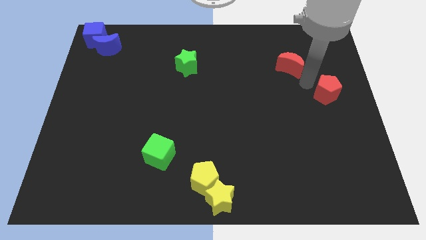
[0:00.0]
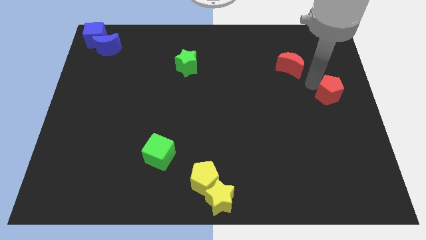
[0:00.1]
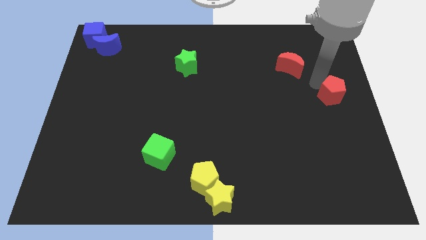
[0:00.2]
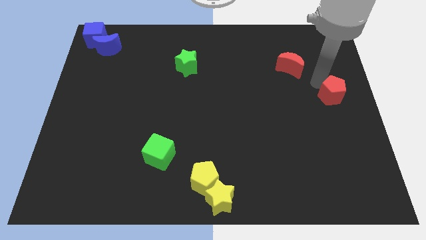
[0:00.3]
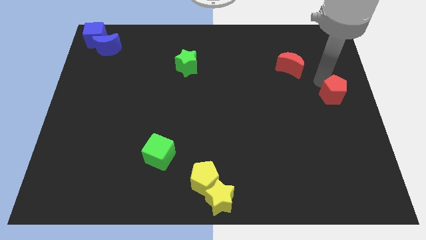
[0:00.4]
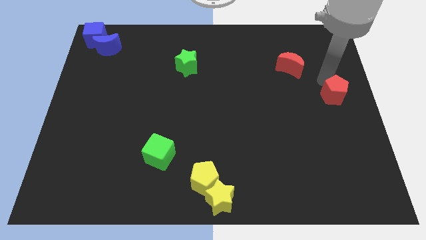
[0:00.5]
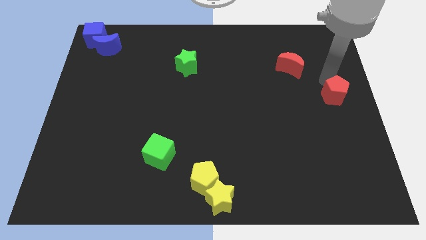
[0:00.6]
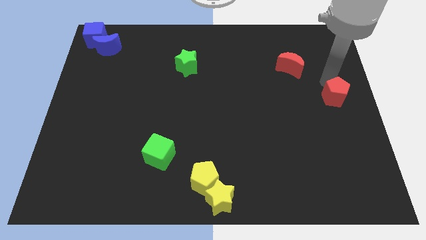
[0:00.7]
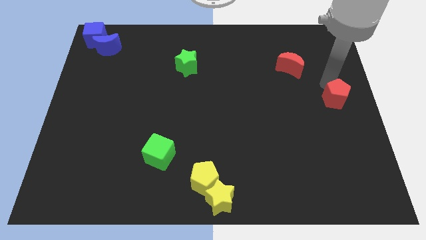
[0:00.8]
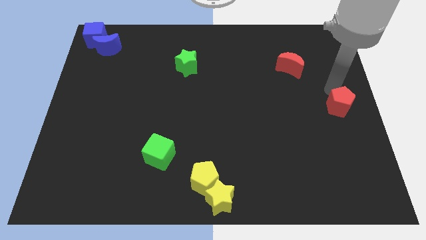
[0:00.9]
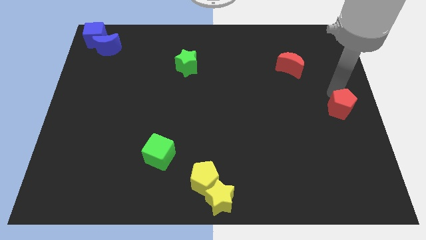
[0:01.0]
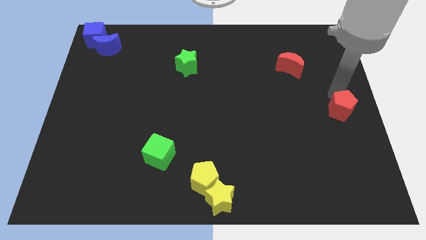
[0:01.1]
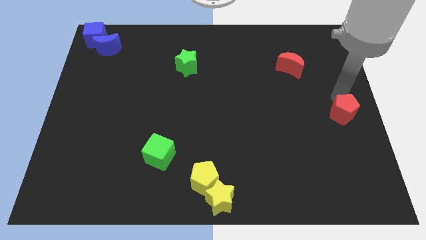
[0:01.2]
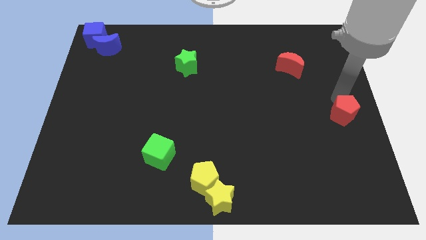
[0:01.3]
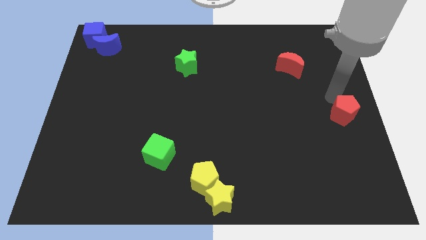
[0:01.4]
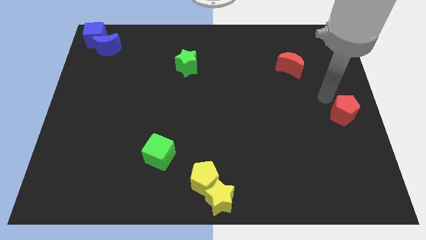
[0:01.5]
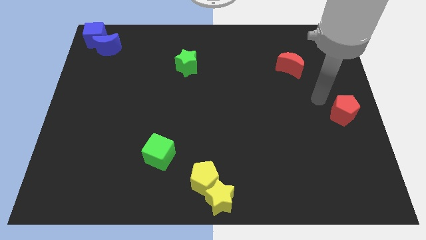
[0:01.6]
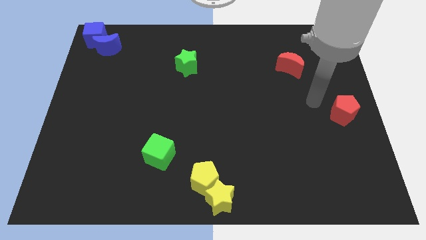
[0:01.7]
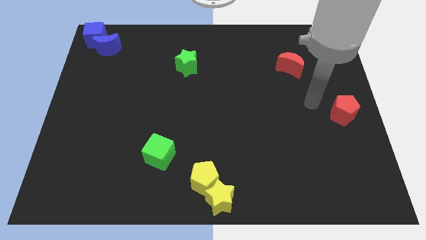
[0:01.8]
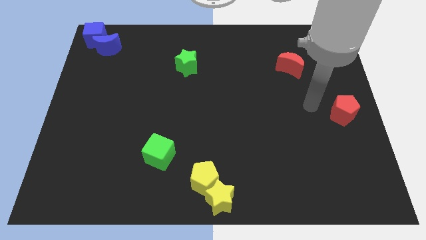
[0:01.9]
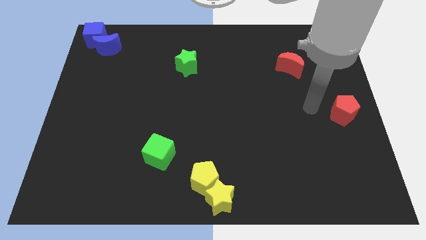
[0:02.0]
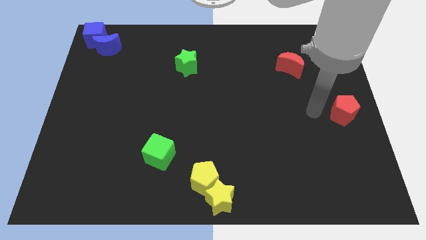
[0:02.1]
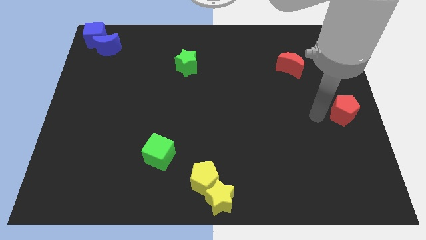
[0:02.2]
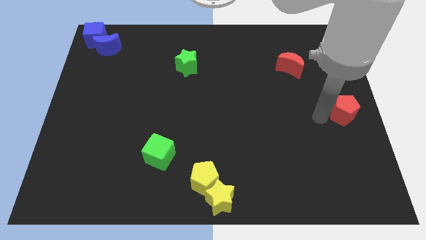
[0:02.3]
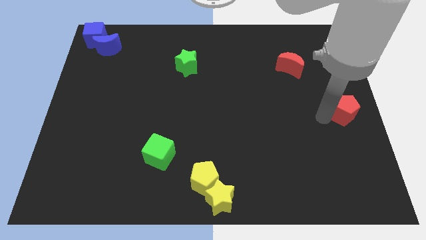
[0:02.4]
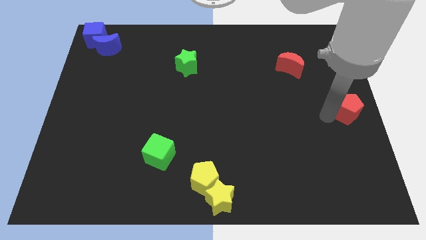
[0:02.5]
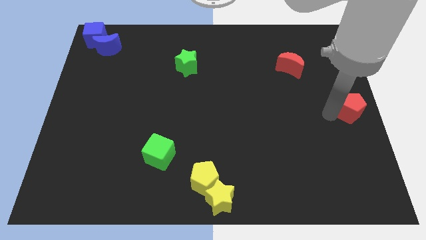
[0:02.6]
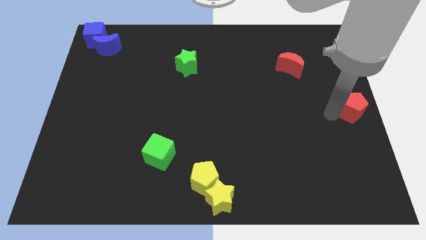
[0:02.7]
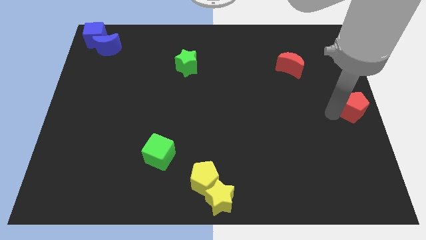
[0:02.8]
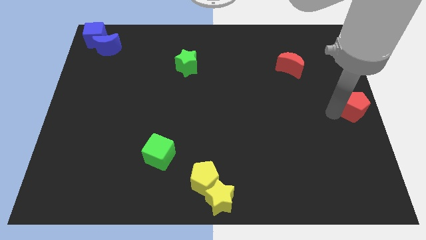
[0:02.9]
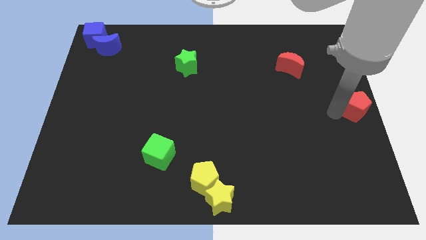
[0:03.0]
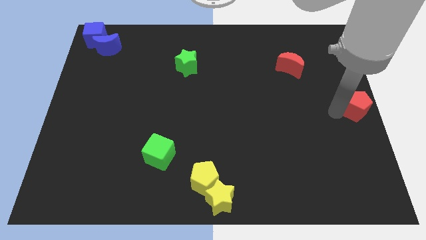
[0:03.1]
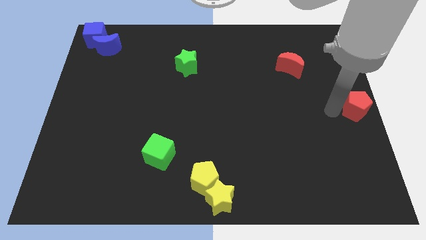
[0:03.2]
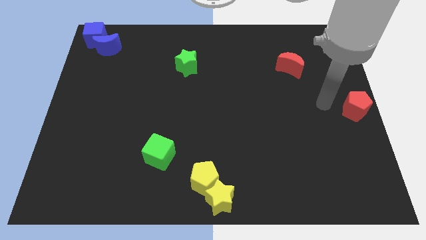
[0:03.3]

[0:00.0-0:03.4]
place the red pentagon at the right center of the board

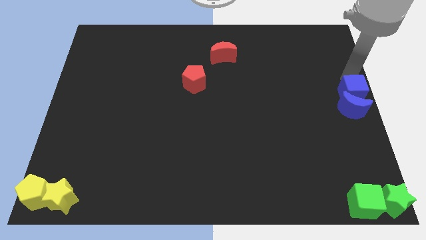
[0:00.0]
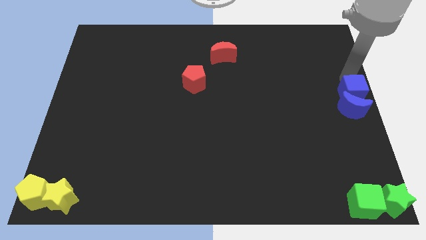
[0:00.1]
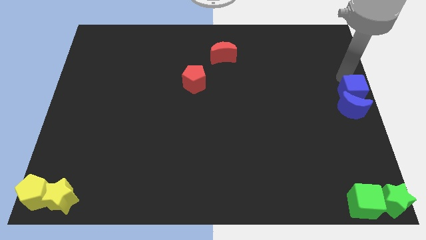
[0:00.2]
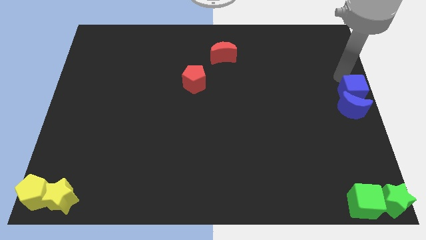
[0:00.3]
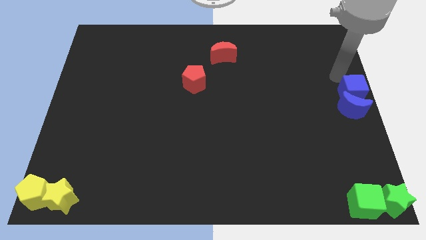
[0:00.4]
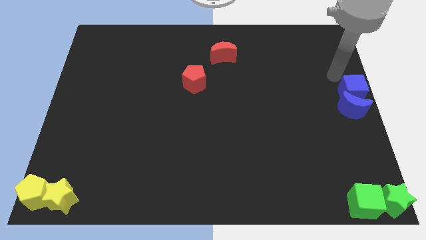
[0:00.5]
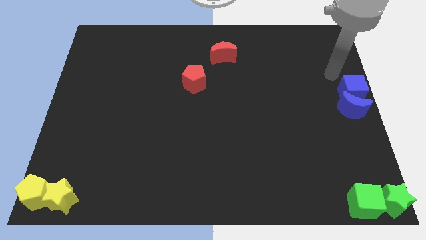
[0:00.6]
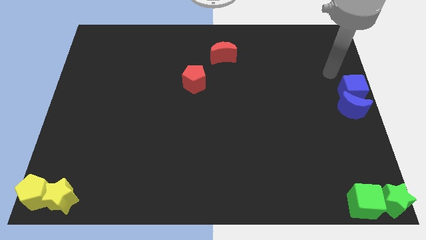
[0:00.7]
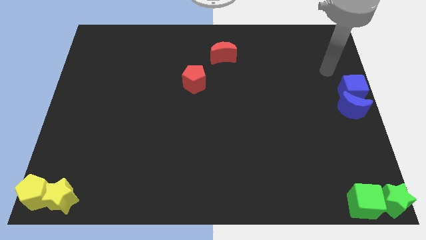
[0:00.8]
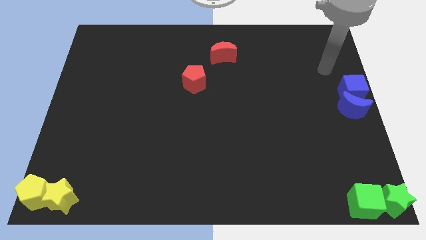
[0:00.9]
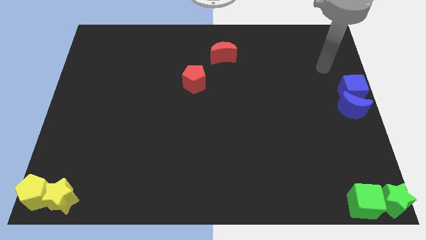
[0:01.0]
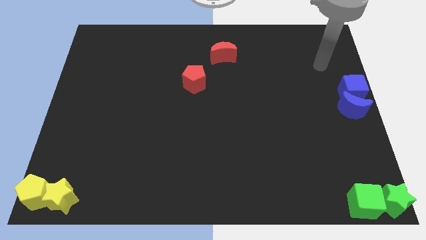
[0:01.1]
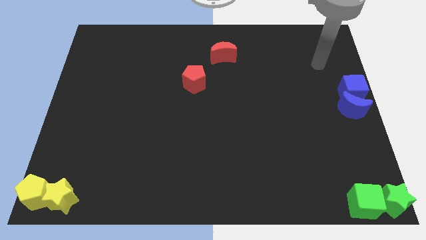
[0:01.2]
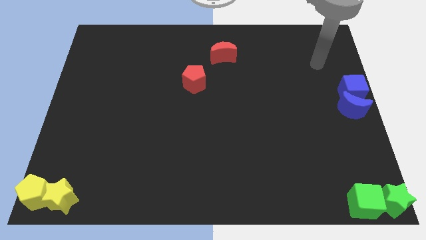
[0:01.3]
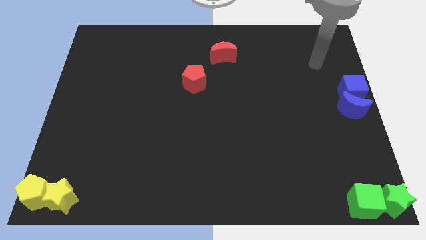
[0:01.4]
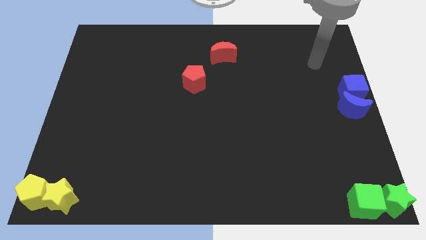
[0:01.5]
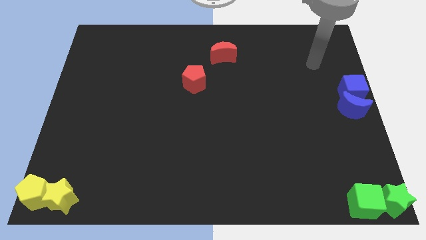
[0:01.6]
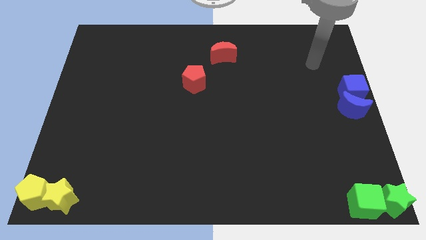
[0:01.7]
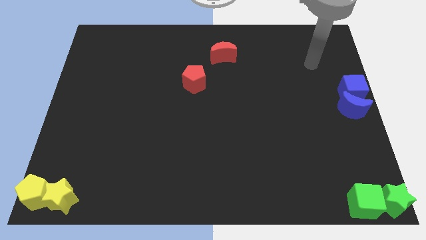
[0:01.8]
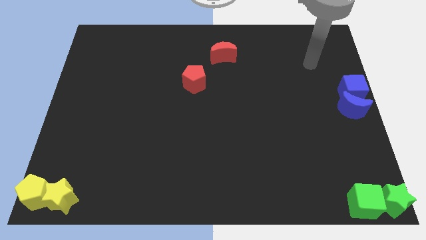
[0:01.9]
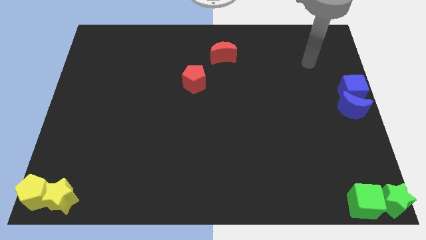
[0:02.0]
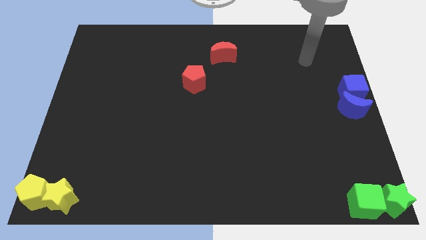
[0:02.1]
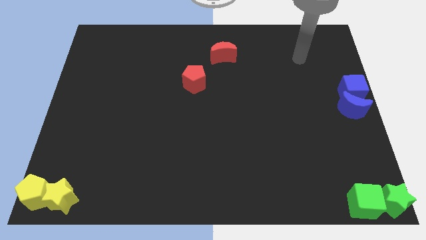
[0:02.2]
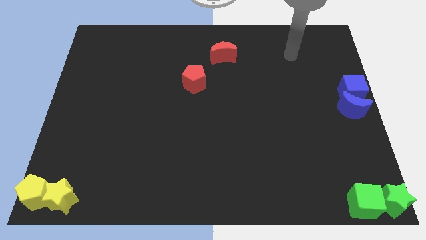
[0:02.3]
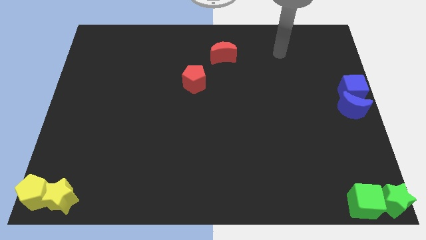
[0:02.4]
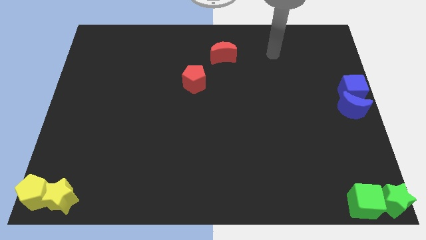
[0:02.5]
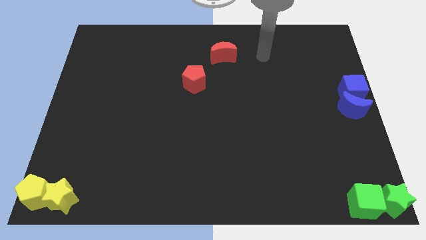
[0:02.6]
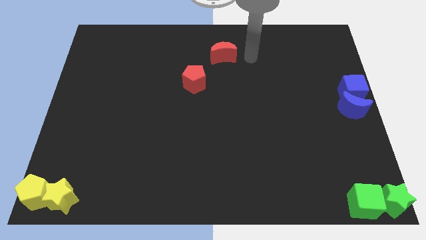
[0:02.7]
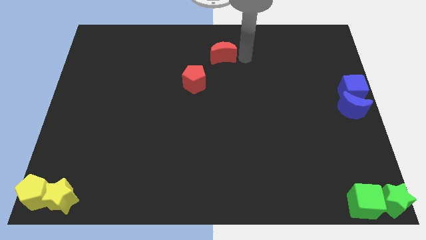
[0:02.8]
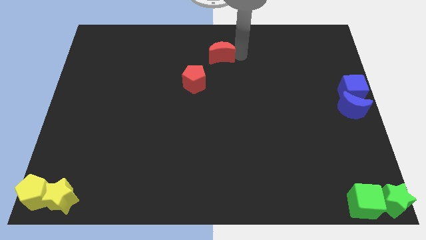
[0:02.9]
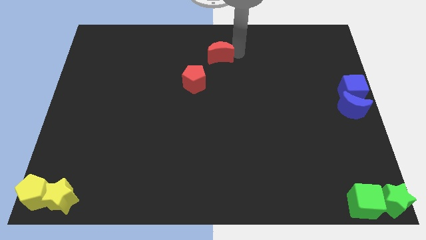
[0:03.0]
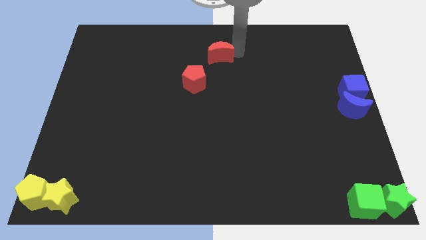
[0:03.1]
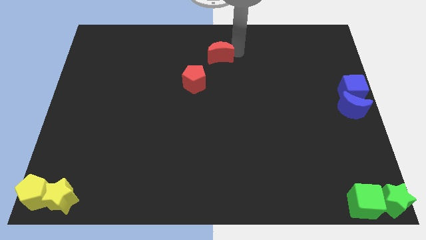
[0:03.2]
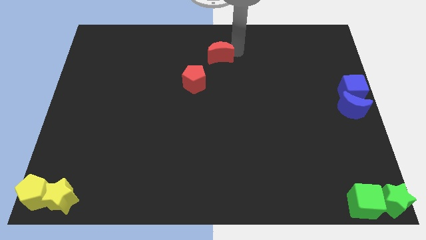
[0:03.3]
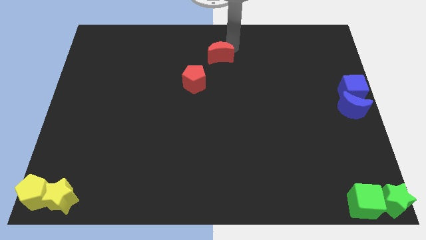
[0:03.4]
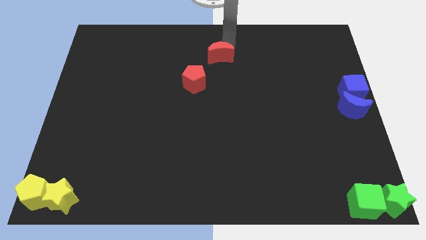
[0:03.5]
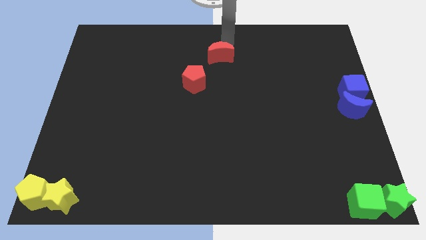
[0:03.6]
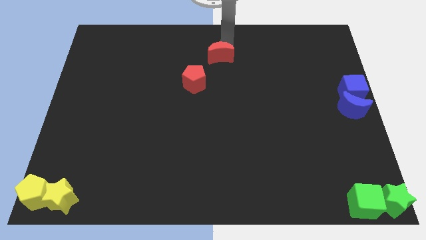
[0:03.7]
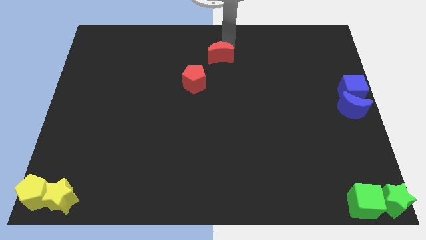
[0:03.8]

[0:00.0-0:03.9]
move the arm to the top right of the red crescent

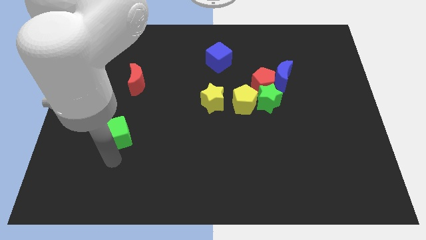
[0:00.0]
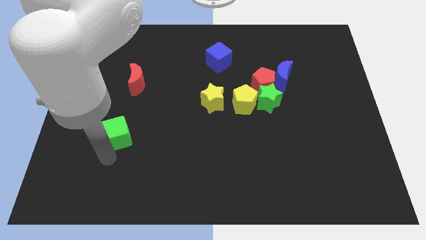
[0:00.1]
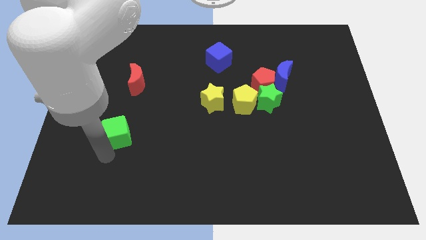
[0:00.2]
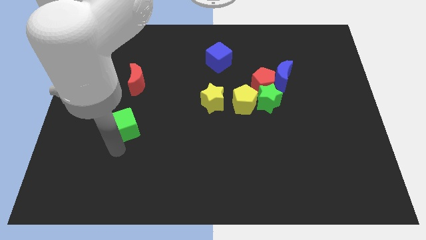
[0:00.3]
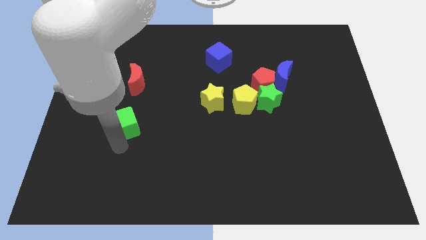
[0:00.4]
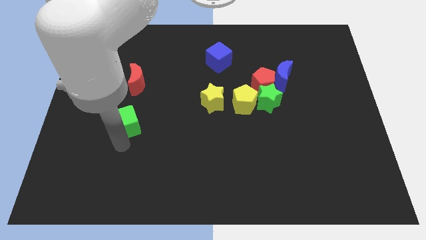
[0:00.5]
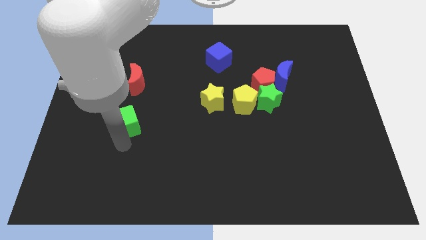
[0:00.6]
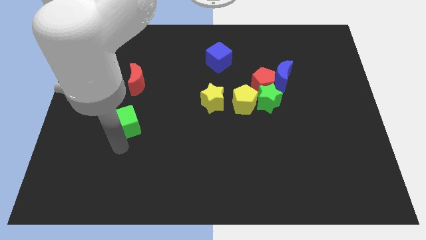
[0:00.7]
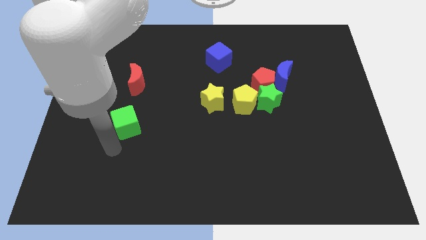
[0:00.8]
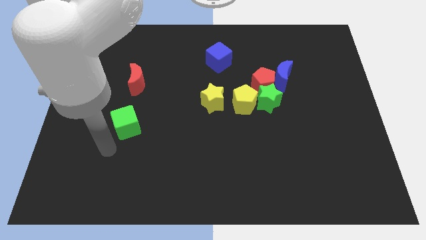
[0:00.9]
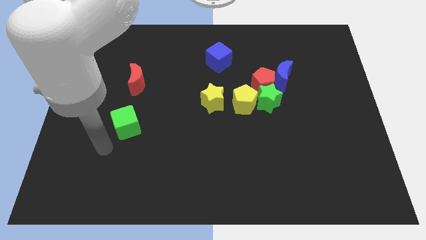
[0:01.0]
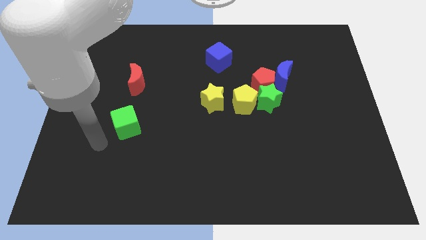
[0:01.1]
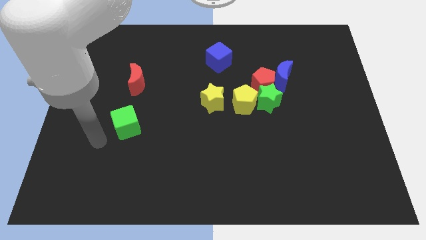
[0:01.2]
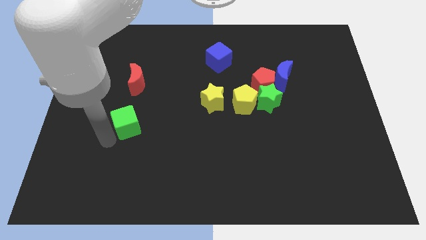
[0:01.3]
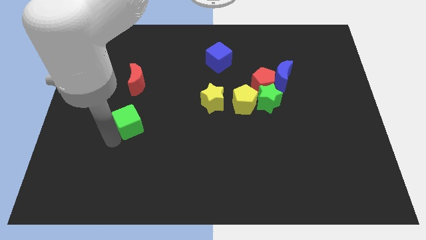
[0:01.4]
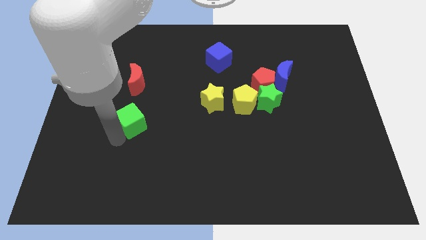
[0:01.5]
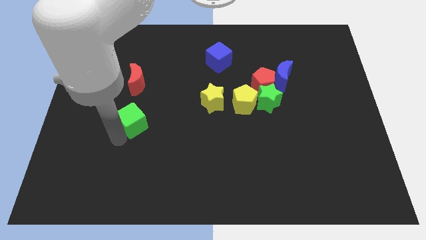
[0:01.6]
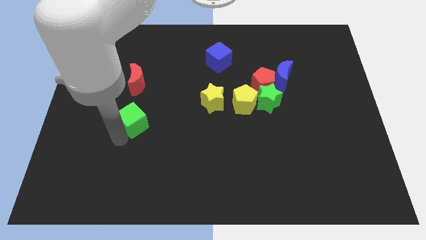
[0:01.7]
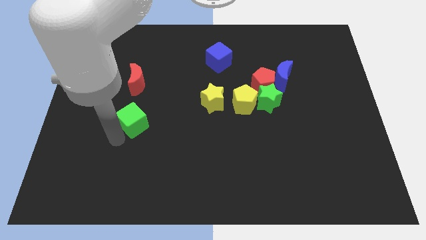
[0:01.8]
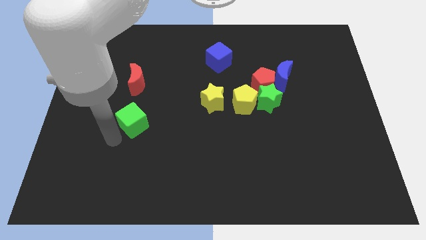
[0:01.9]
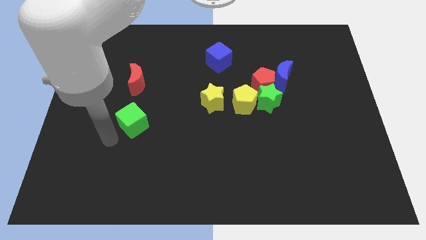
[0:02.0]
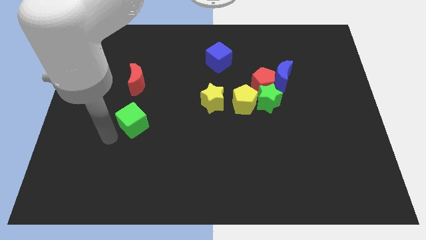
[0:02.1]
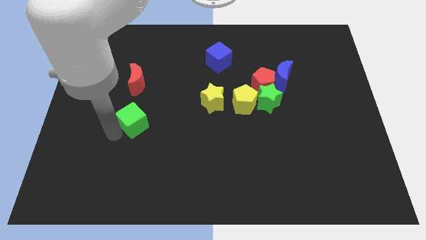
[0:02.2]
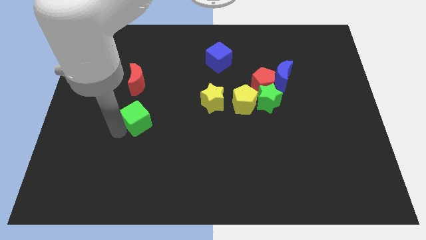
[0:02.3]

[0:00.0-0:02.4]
move the green cube below the red moon
